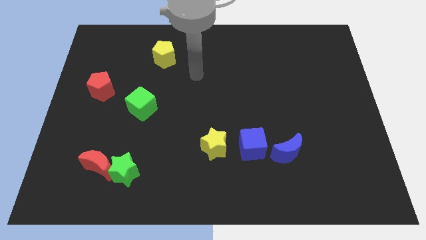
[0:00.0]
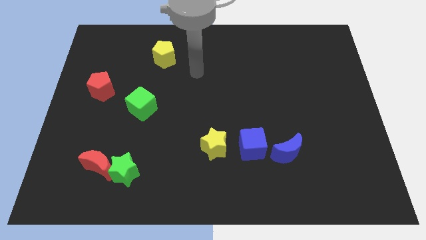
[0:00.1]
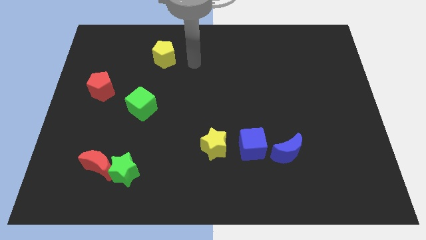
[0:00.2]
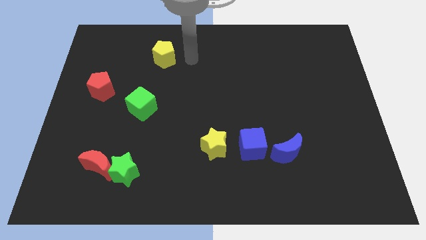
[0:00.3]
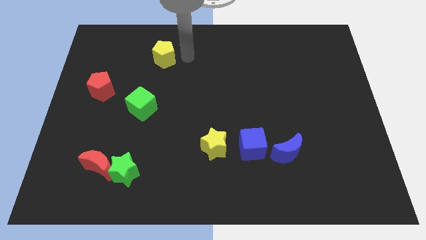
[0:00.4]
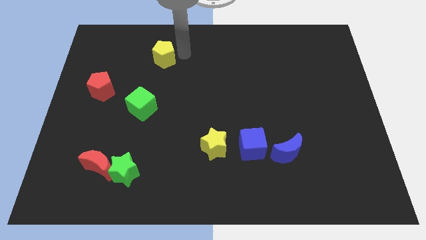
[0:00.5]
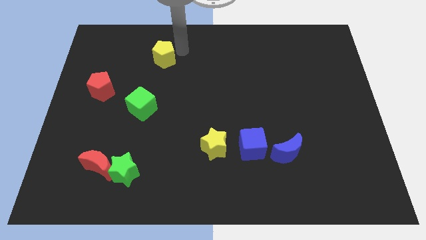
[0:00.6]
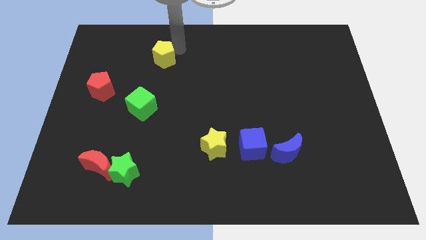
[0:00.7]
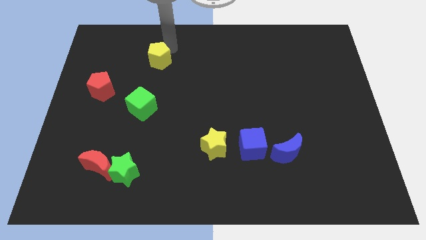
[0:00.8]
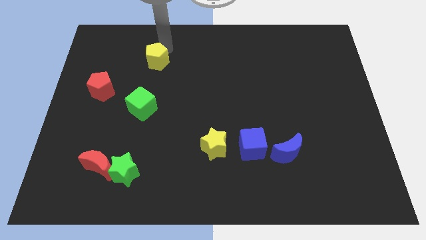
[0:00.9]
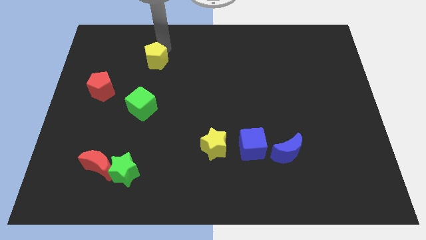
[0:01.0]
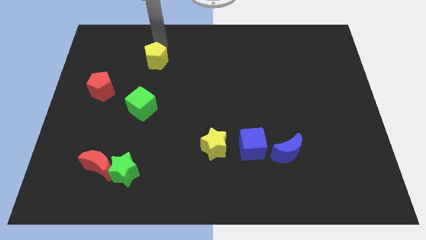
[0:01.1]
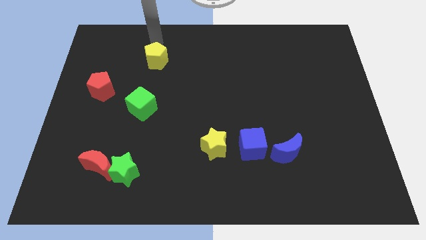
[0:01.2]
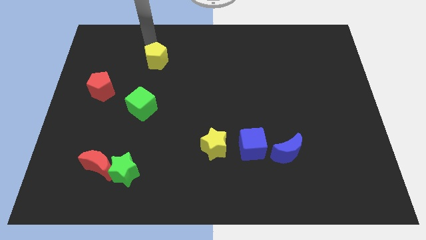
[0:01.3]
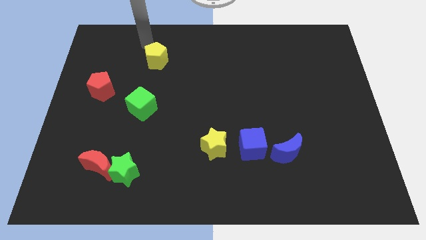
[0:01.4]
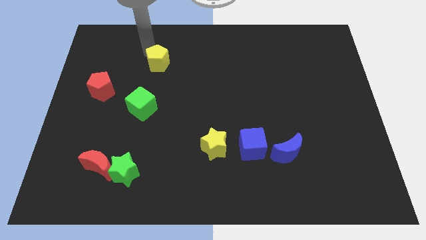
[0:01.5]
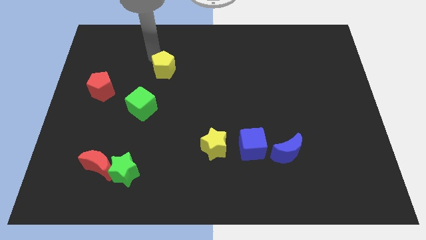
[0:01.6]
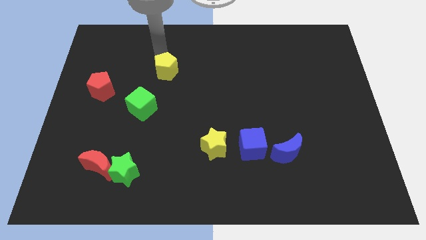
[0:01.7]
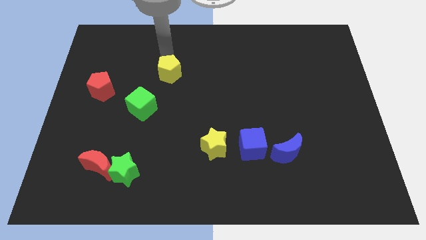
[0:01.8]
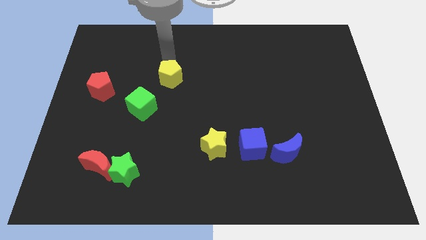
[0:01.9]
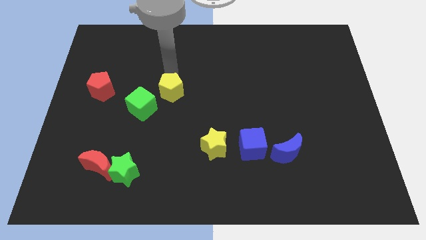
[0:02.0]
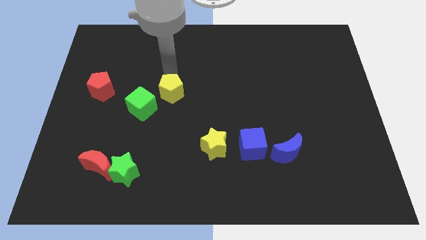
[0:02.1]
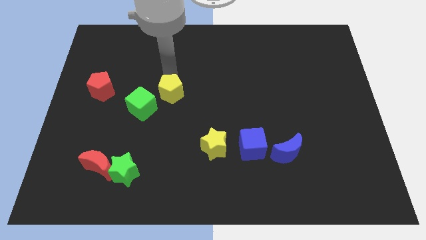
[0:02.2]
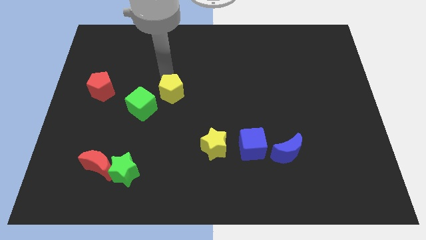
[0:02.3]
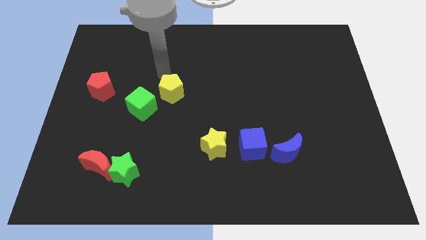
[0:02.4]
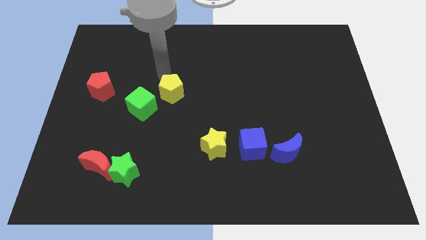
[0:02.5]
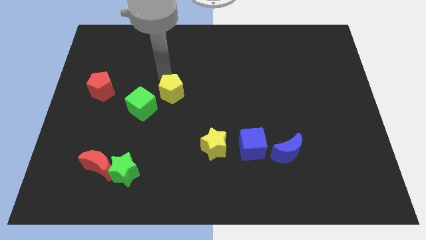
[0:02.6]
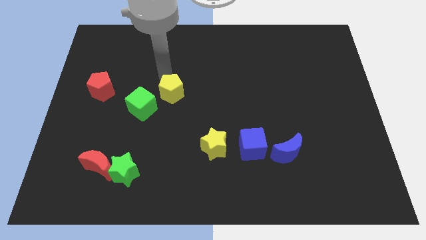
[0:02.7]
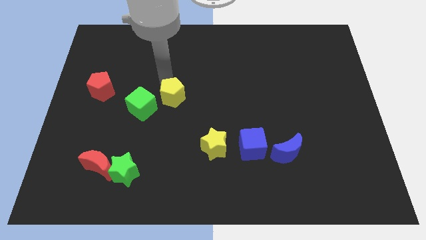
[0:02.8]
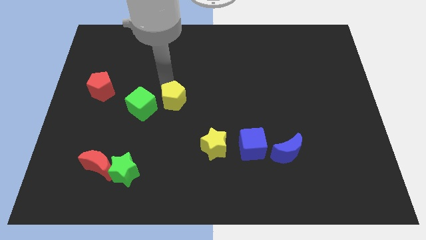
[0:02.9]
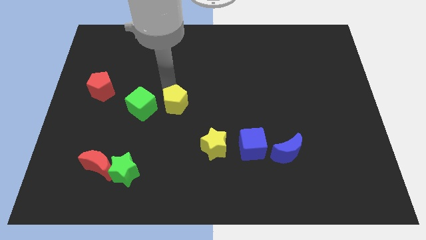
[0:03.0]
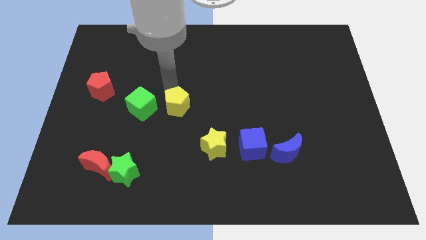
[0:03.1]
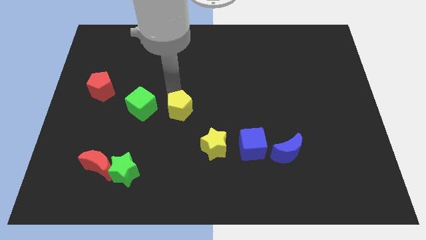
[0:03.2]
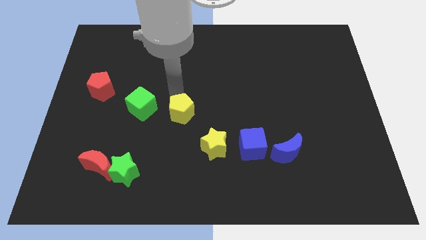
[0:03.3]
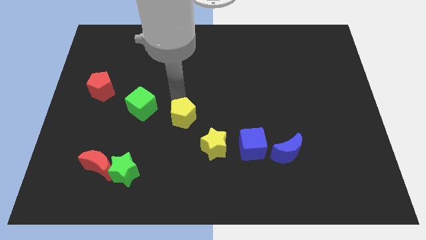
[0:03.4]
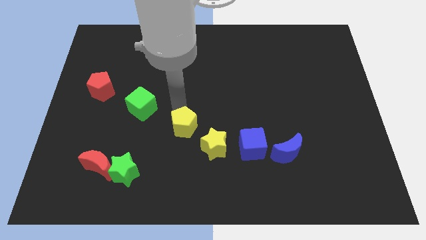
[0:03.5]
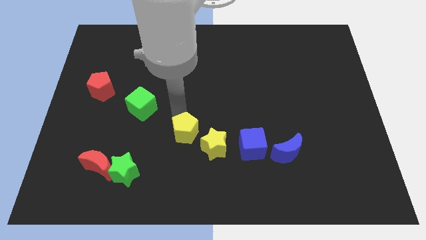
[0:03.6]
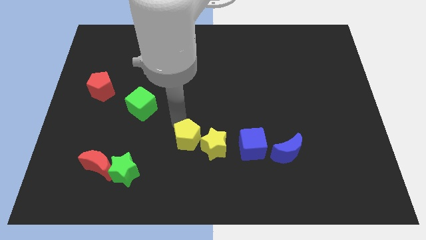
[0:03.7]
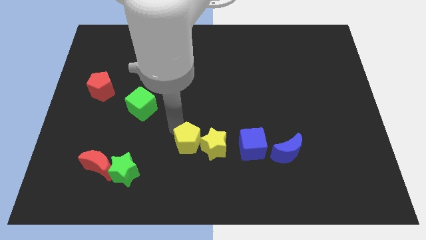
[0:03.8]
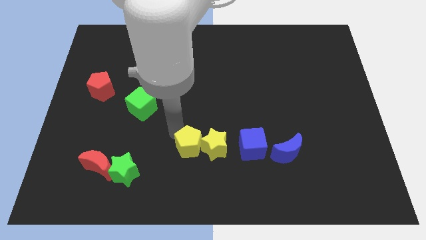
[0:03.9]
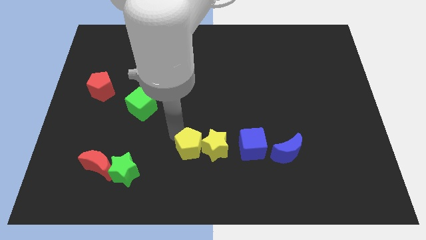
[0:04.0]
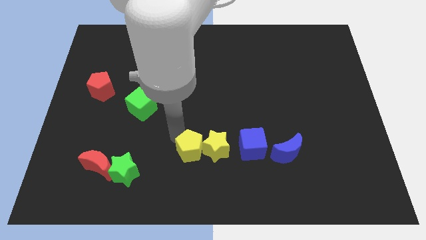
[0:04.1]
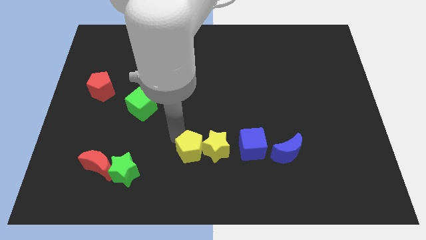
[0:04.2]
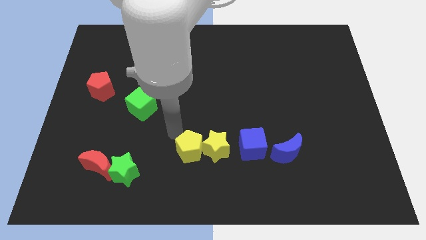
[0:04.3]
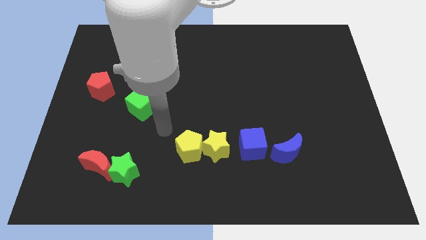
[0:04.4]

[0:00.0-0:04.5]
push the yellow pentagon into the left side of the yellow star

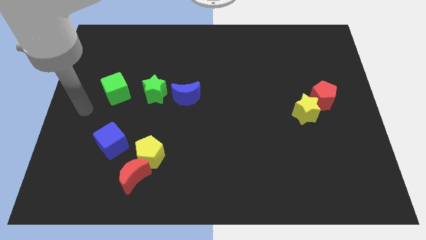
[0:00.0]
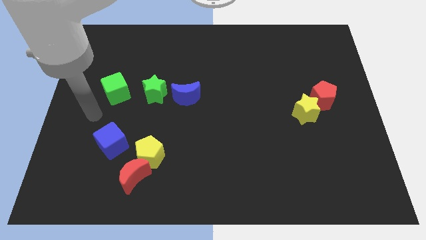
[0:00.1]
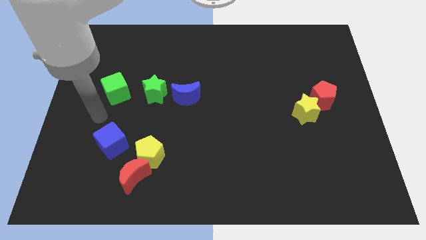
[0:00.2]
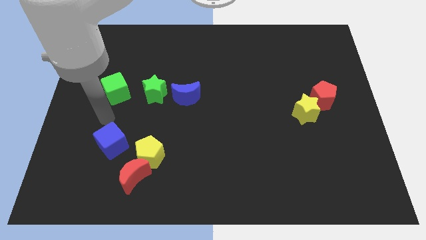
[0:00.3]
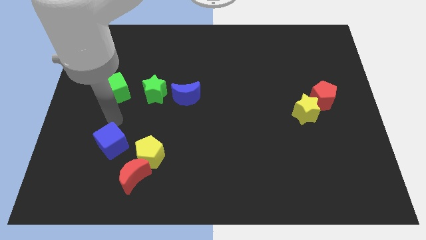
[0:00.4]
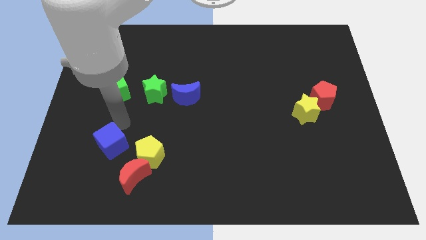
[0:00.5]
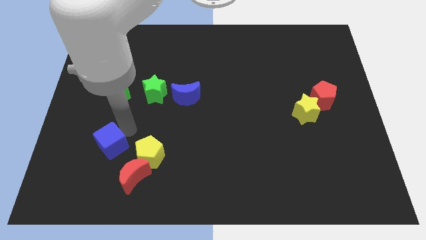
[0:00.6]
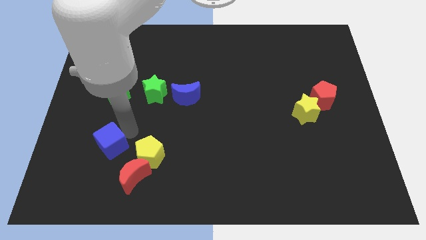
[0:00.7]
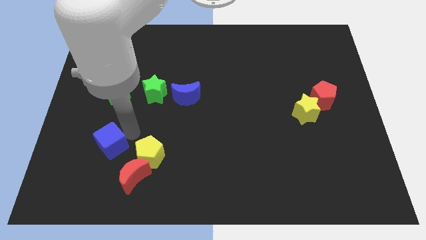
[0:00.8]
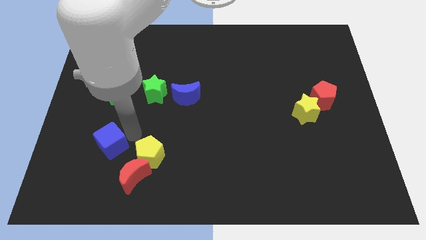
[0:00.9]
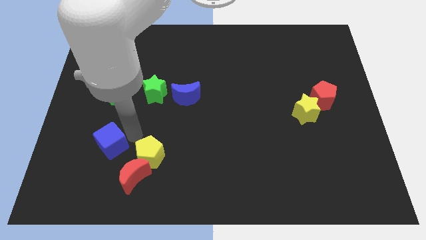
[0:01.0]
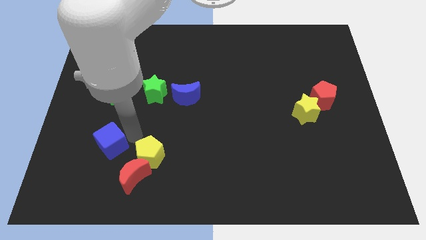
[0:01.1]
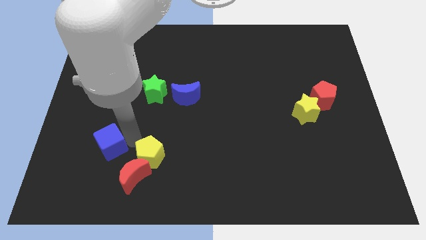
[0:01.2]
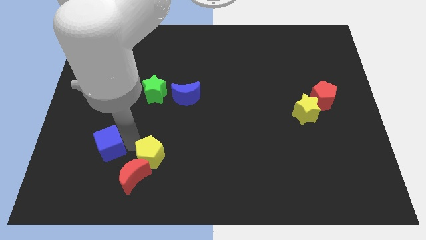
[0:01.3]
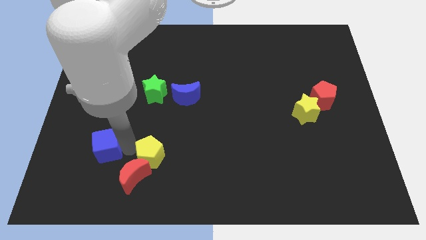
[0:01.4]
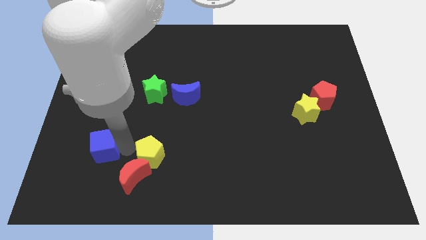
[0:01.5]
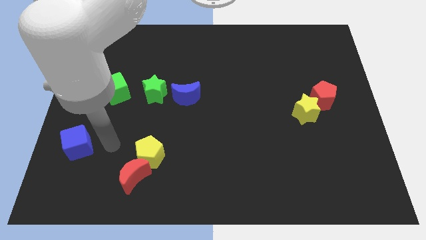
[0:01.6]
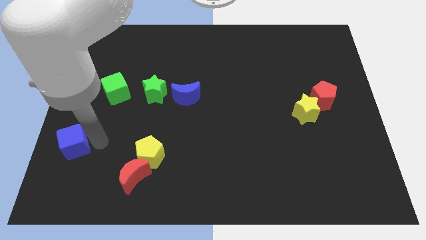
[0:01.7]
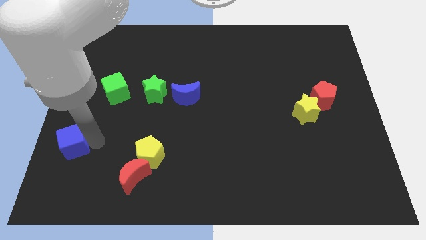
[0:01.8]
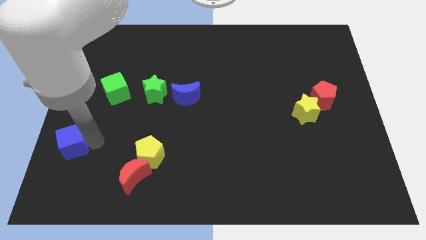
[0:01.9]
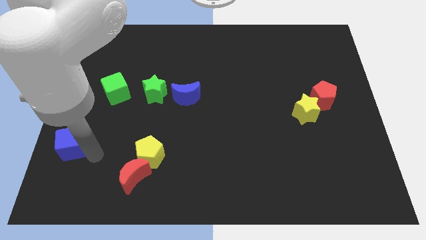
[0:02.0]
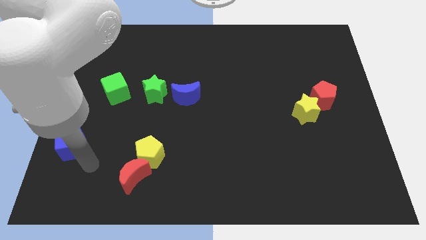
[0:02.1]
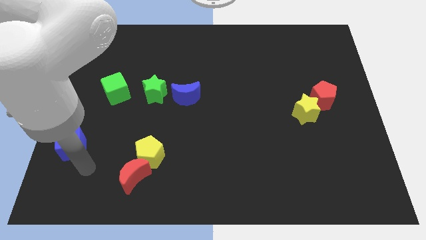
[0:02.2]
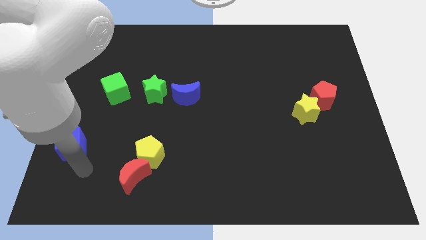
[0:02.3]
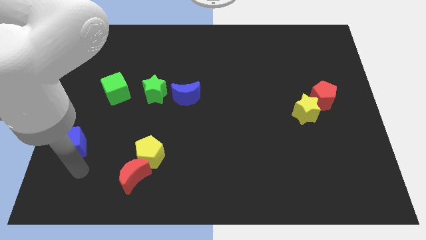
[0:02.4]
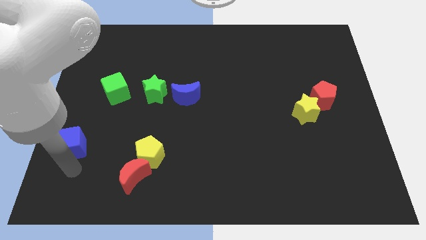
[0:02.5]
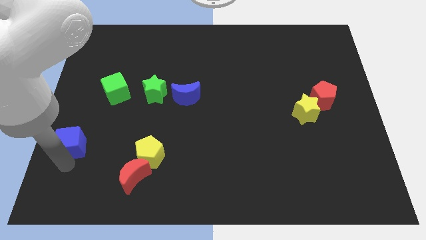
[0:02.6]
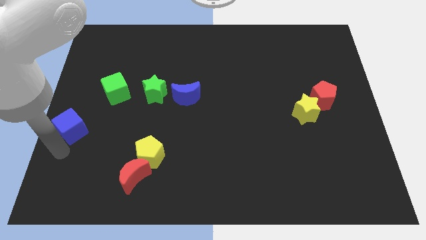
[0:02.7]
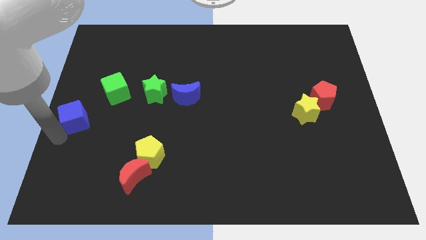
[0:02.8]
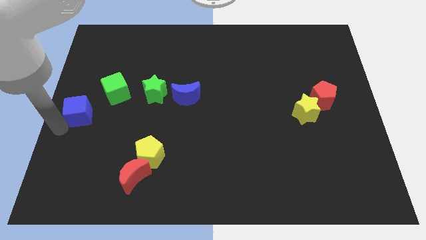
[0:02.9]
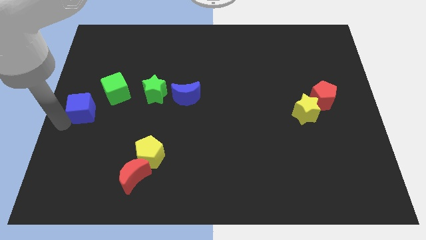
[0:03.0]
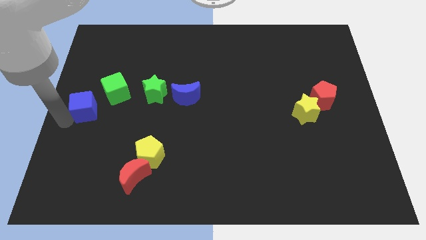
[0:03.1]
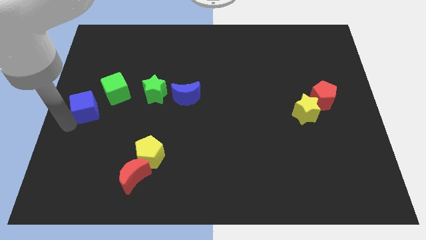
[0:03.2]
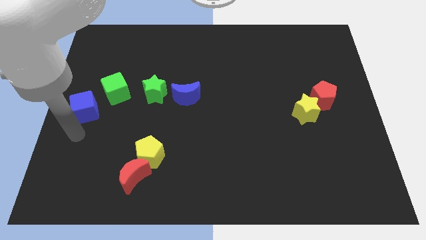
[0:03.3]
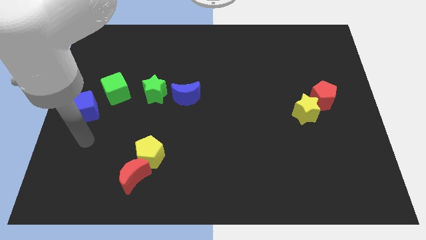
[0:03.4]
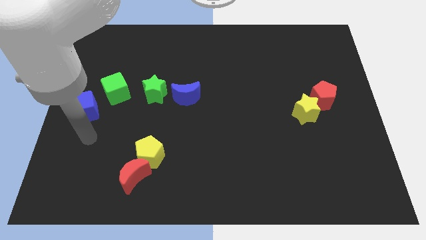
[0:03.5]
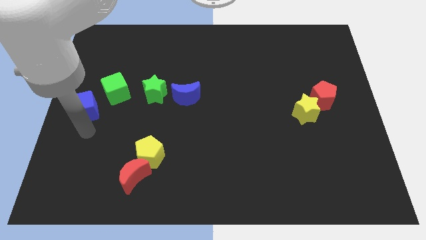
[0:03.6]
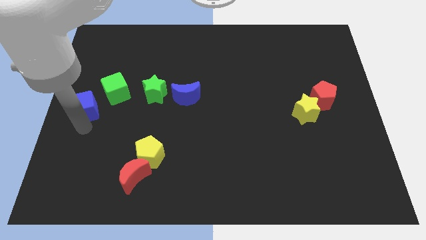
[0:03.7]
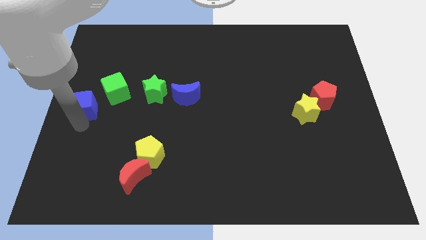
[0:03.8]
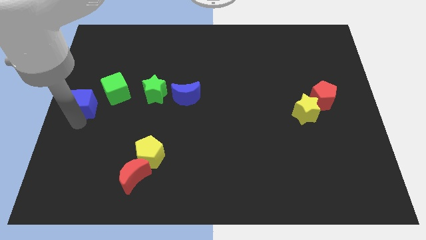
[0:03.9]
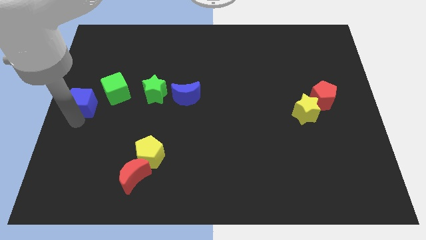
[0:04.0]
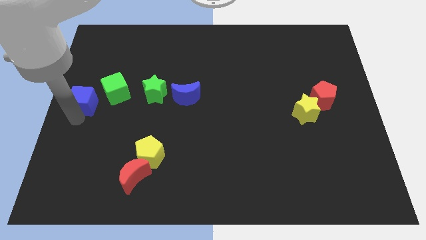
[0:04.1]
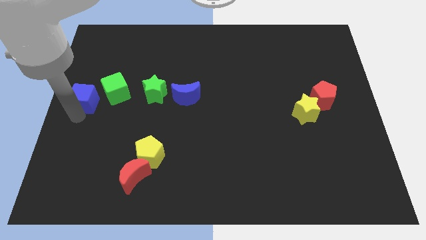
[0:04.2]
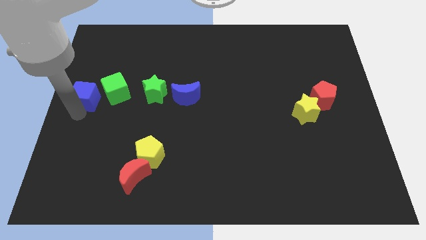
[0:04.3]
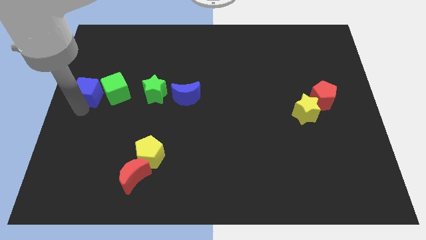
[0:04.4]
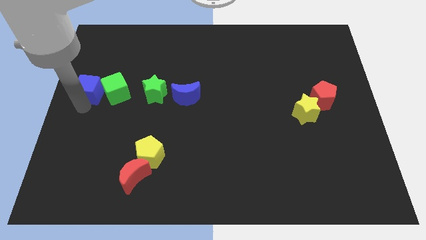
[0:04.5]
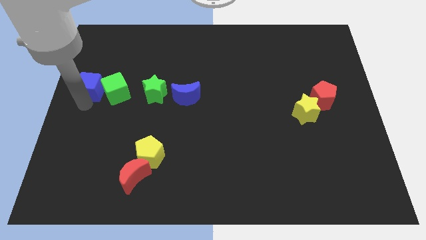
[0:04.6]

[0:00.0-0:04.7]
place the blue cube to the left of the green cube
